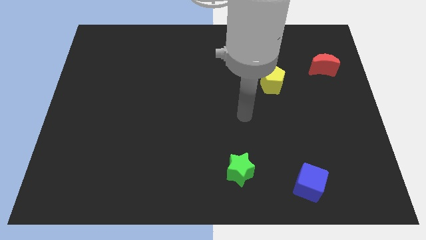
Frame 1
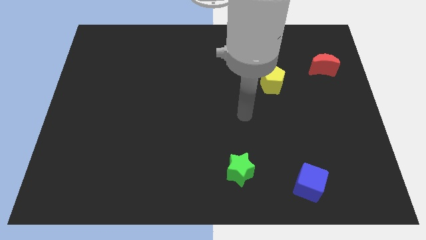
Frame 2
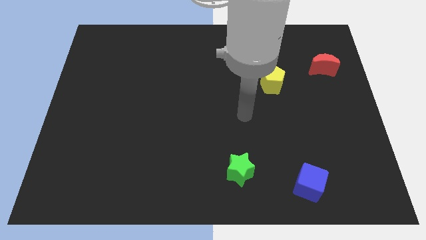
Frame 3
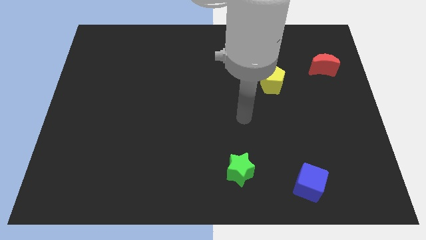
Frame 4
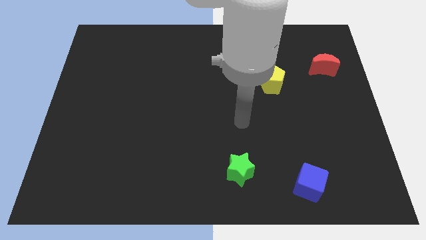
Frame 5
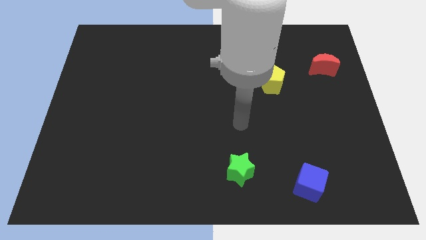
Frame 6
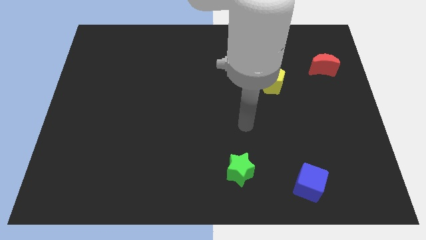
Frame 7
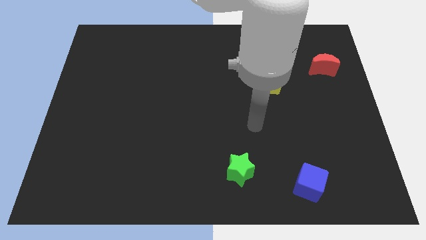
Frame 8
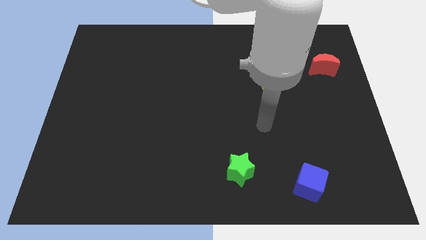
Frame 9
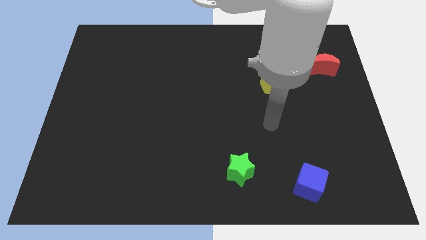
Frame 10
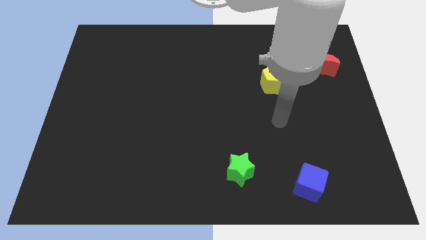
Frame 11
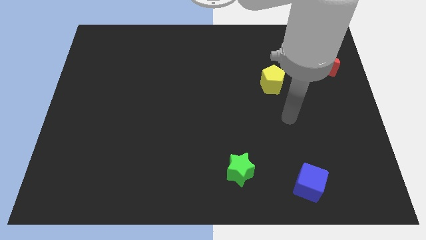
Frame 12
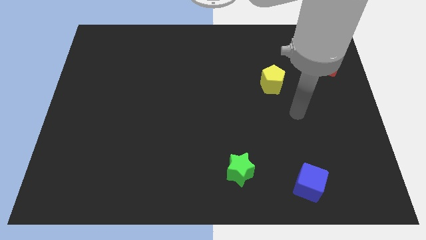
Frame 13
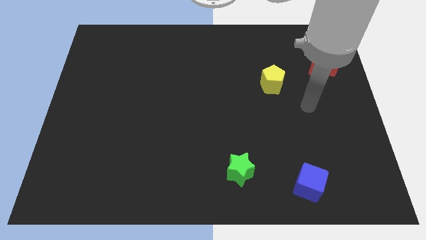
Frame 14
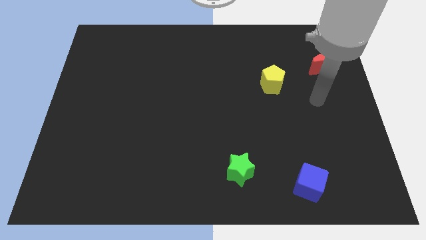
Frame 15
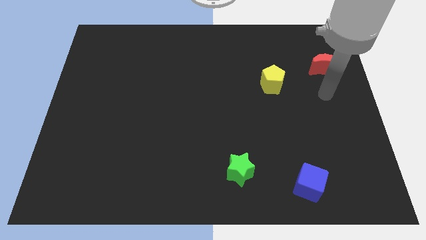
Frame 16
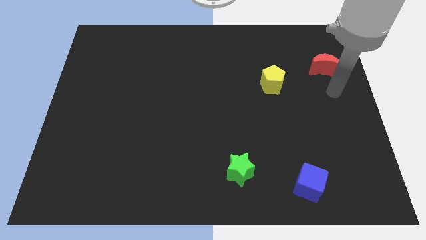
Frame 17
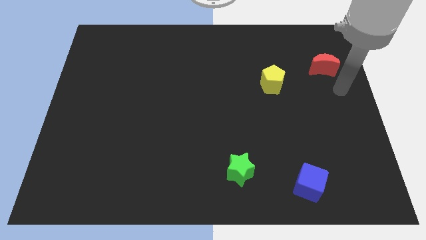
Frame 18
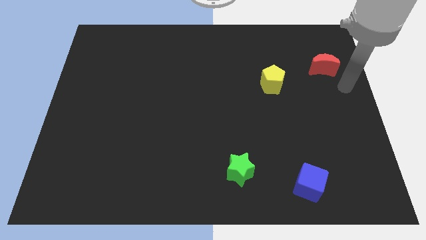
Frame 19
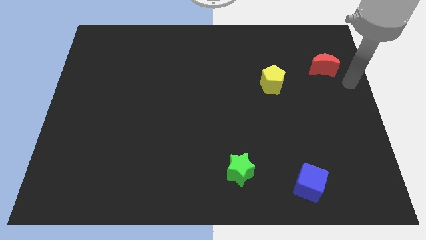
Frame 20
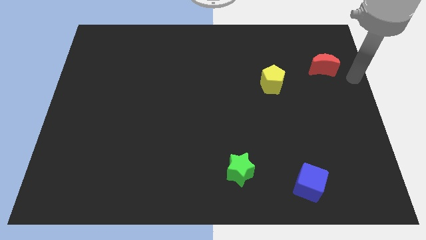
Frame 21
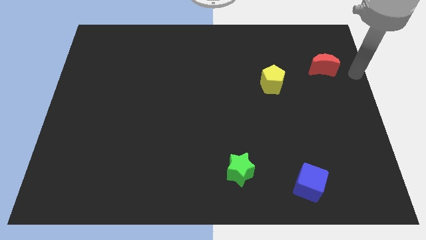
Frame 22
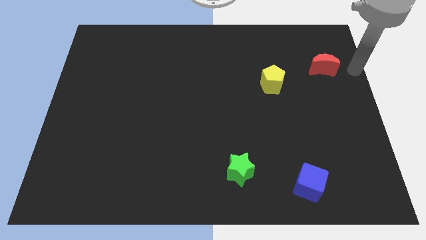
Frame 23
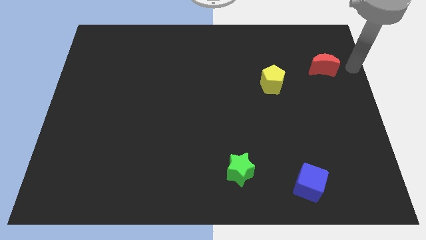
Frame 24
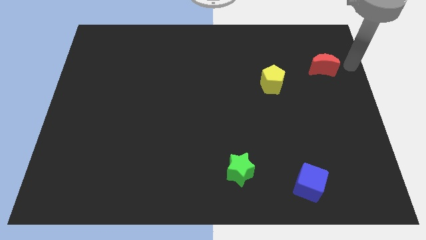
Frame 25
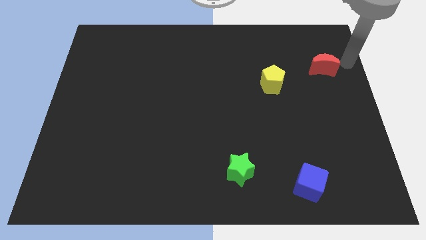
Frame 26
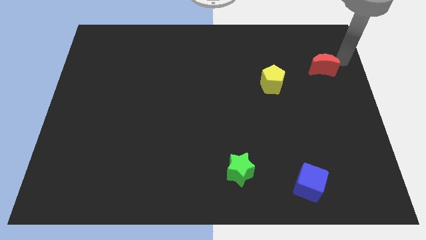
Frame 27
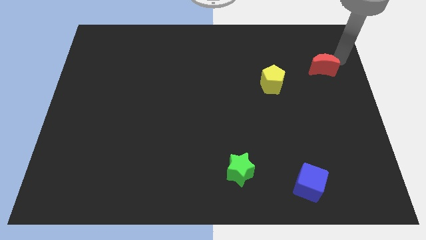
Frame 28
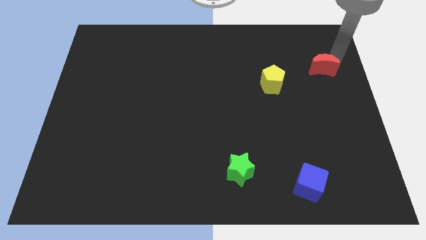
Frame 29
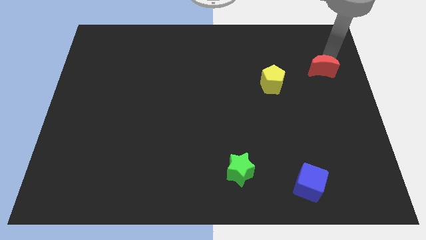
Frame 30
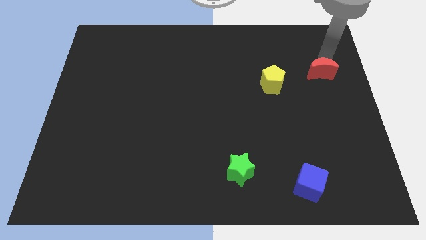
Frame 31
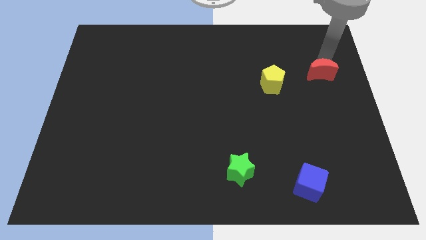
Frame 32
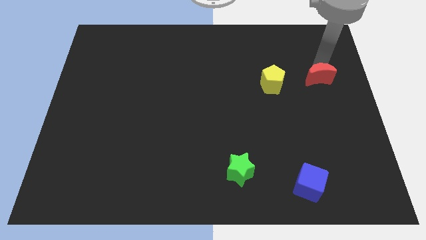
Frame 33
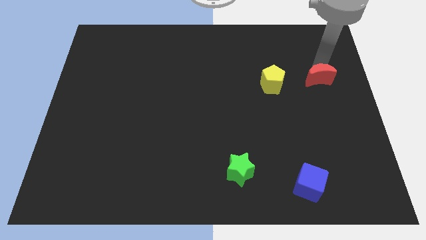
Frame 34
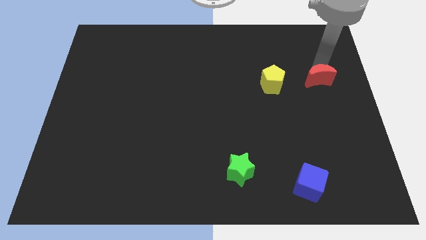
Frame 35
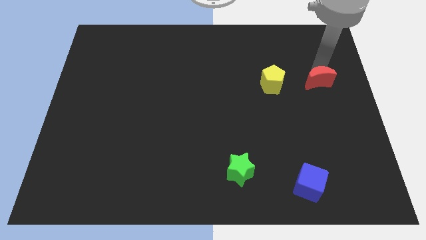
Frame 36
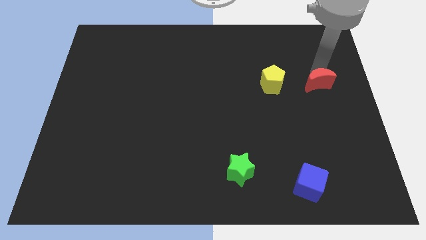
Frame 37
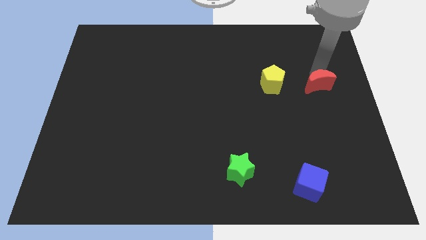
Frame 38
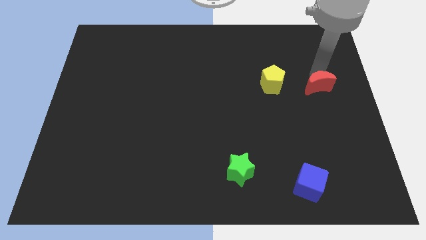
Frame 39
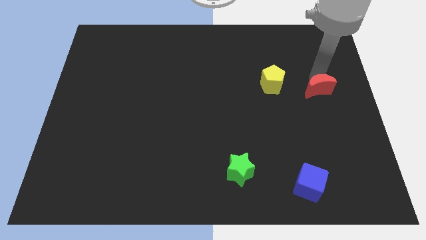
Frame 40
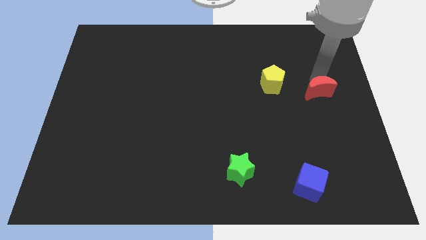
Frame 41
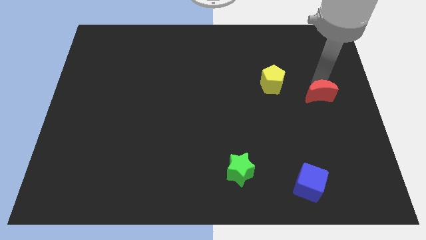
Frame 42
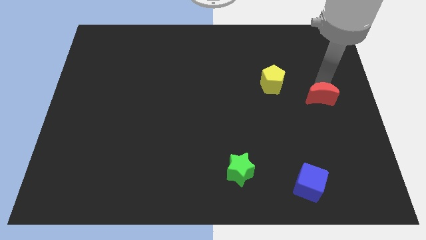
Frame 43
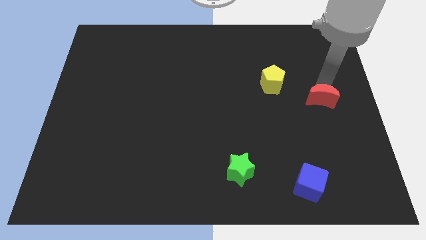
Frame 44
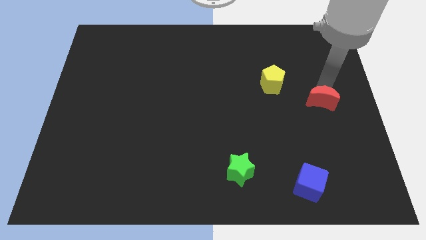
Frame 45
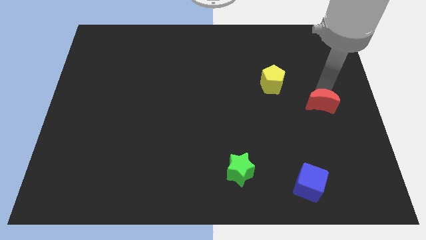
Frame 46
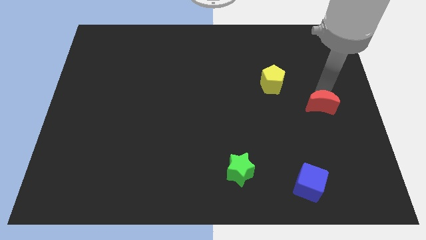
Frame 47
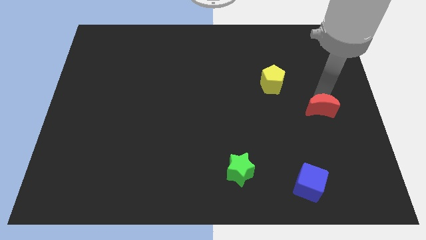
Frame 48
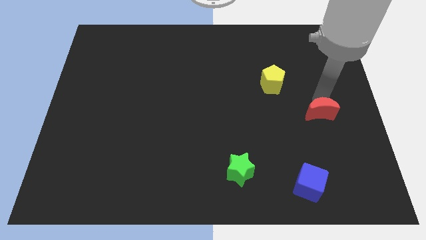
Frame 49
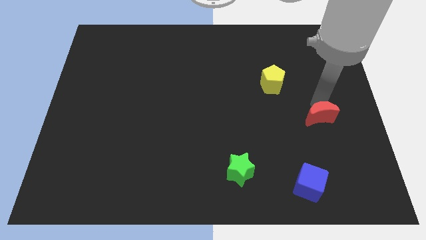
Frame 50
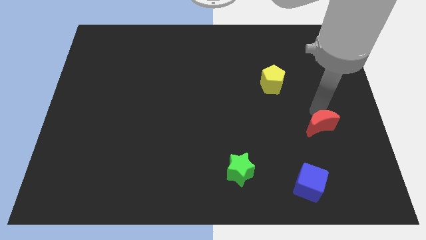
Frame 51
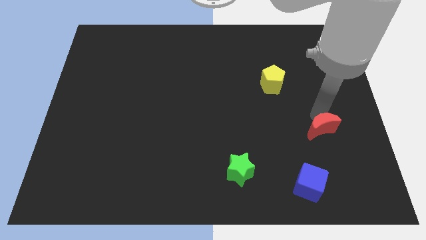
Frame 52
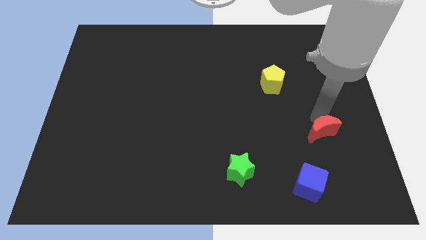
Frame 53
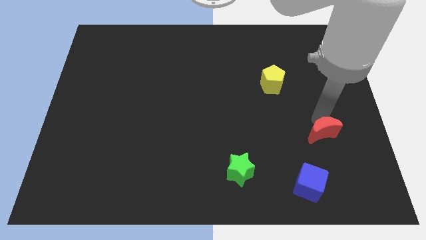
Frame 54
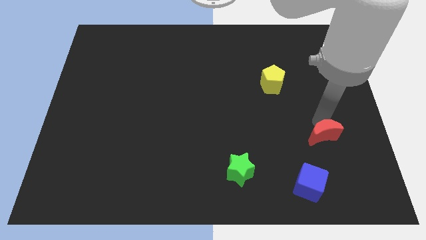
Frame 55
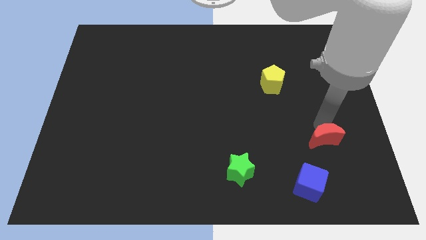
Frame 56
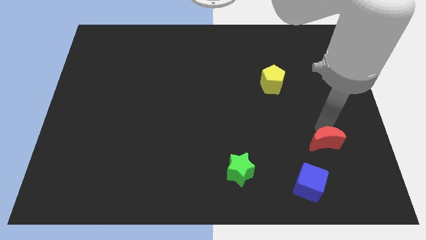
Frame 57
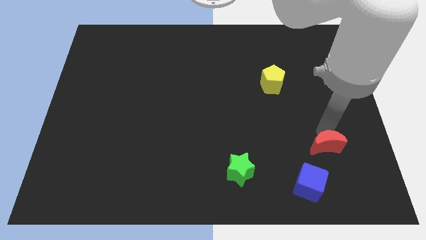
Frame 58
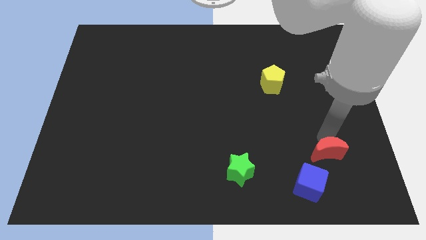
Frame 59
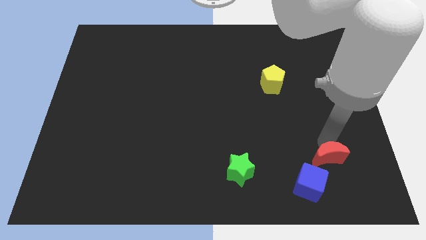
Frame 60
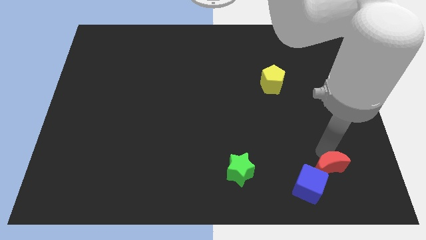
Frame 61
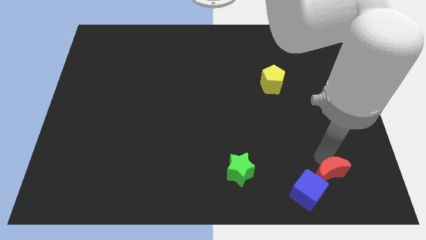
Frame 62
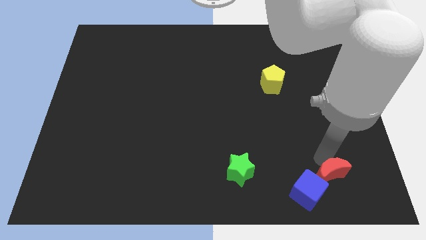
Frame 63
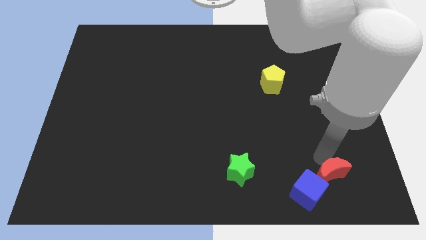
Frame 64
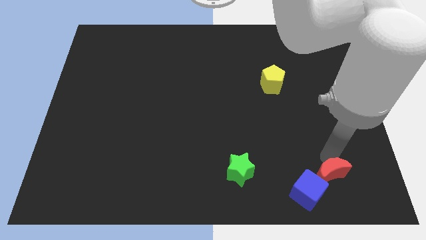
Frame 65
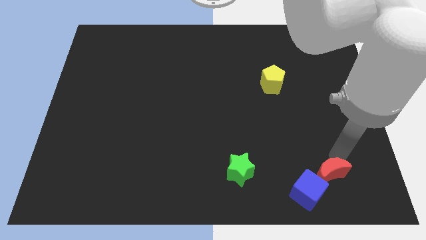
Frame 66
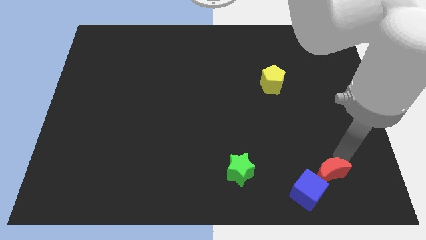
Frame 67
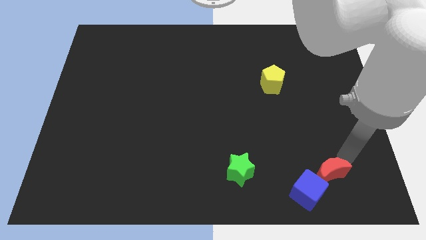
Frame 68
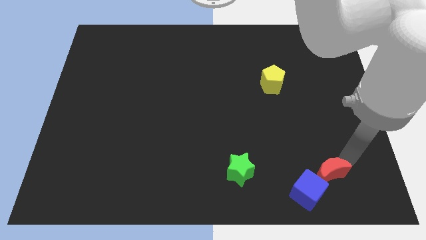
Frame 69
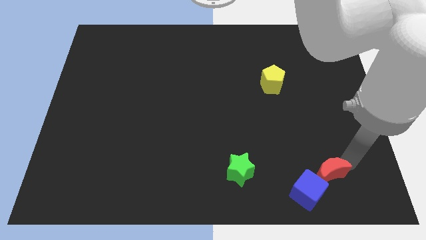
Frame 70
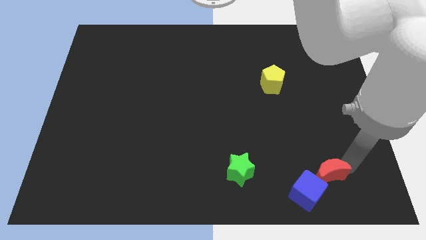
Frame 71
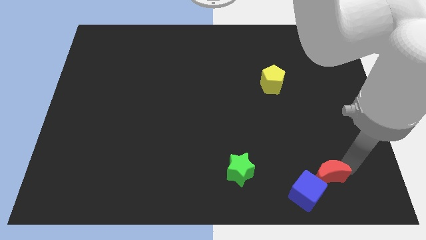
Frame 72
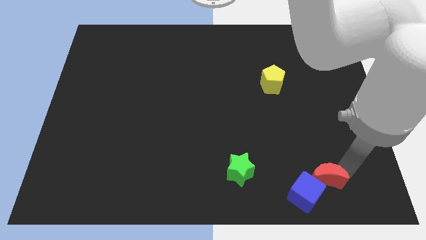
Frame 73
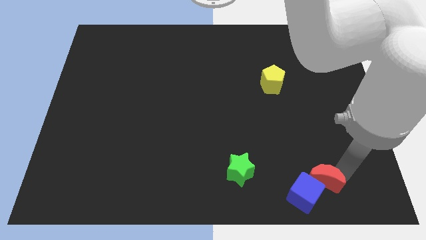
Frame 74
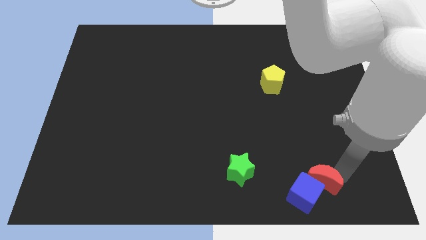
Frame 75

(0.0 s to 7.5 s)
put the moon close to the blue cube

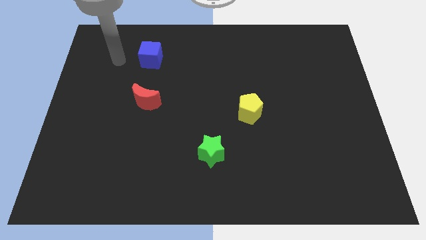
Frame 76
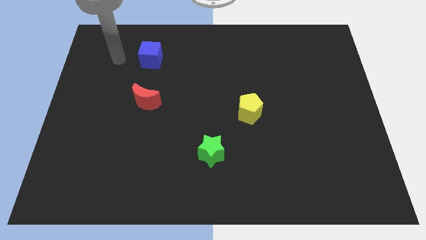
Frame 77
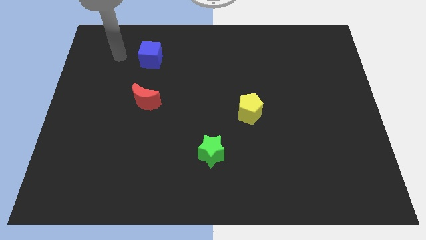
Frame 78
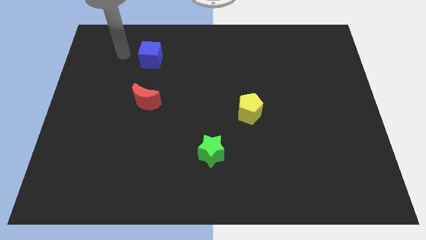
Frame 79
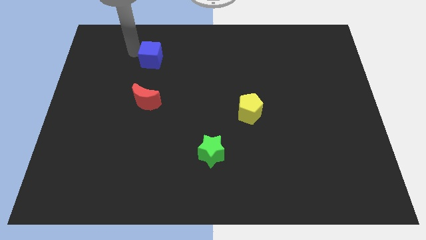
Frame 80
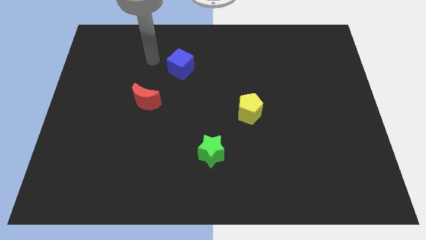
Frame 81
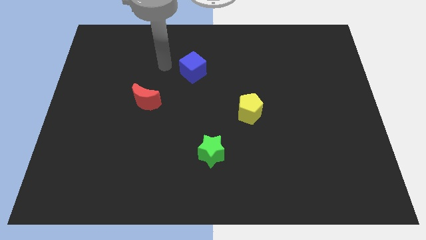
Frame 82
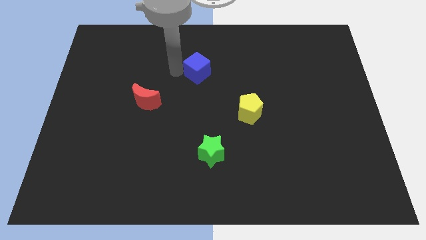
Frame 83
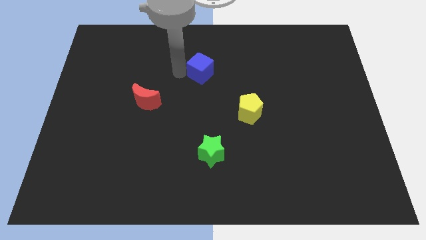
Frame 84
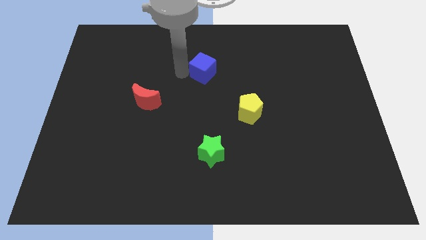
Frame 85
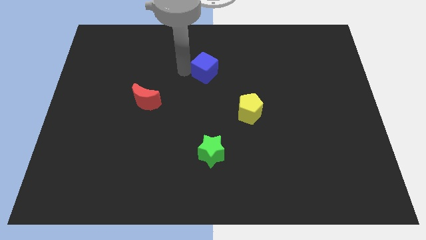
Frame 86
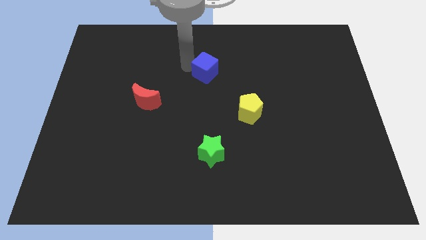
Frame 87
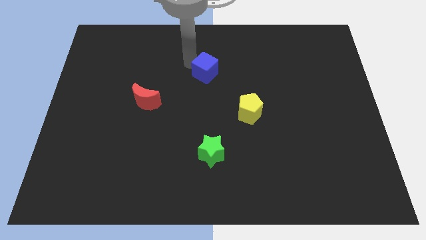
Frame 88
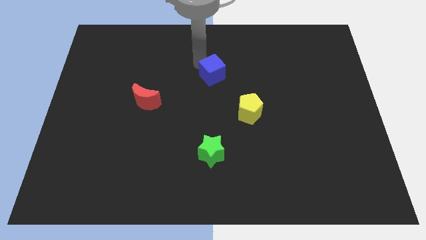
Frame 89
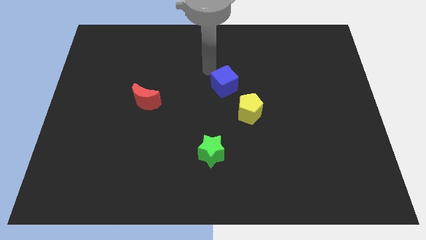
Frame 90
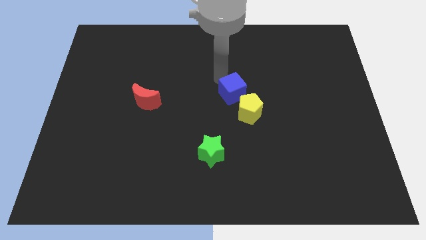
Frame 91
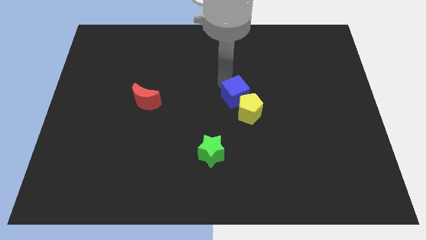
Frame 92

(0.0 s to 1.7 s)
put the cube close to the yellow block
